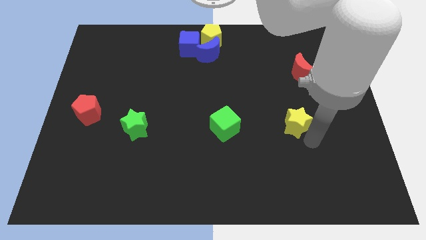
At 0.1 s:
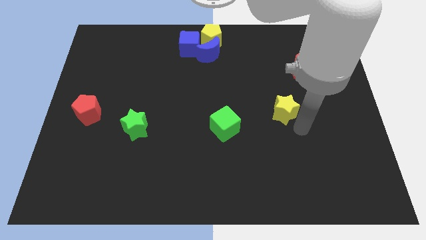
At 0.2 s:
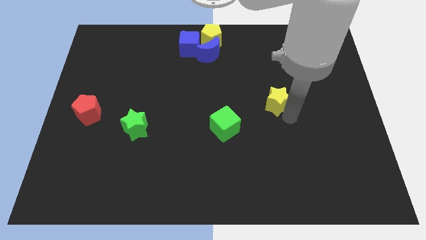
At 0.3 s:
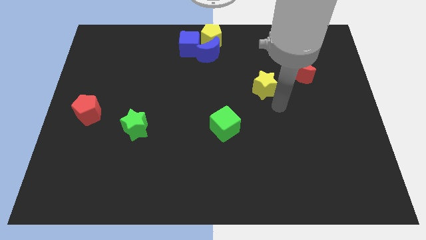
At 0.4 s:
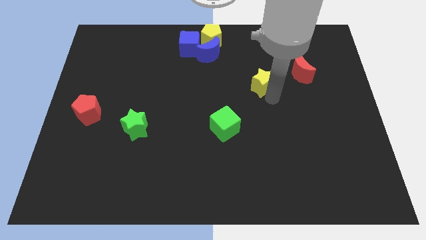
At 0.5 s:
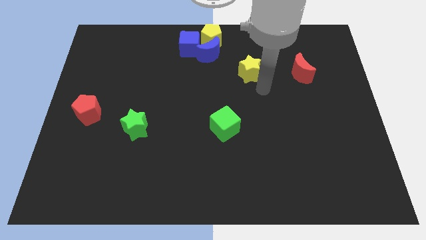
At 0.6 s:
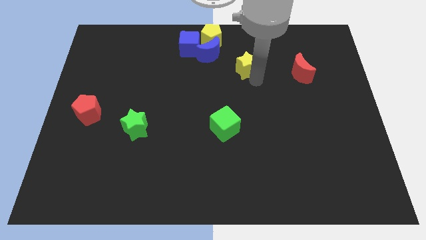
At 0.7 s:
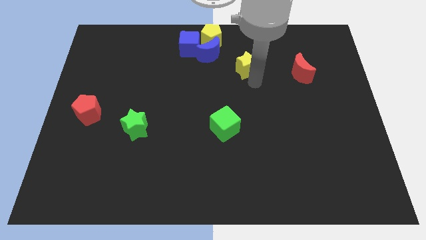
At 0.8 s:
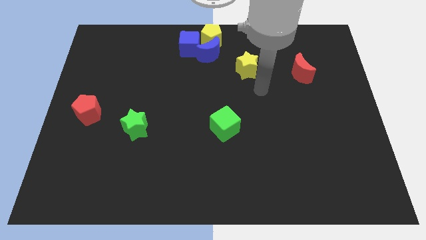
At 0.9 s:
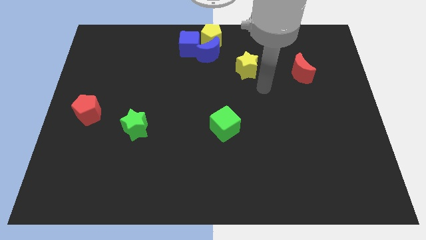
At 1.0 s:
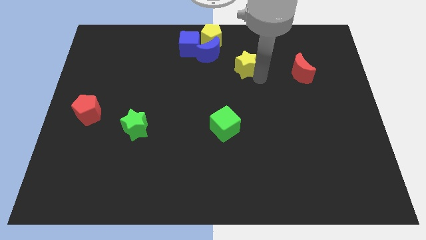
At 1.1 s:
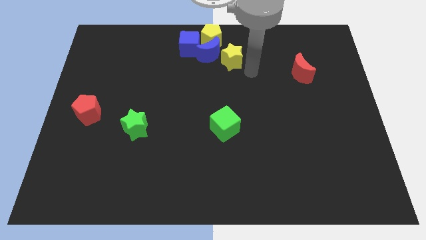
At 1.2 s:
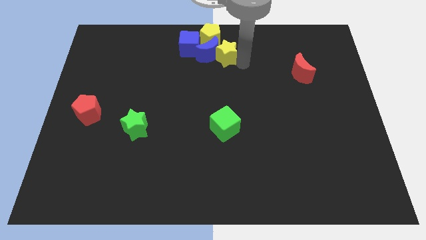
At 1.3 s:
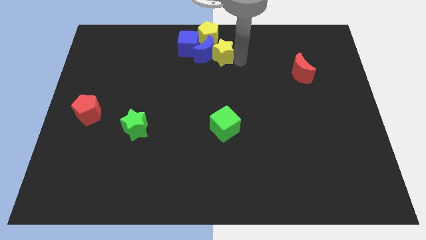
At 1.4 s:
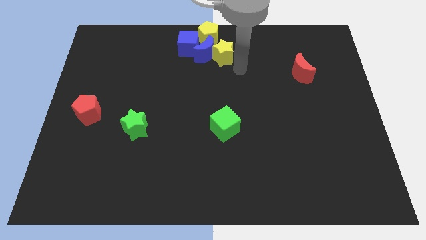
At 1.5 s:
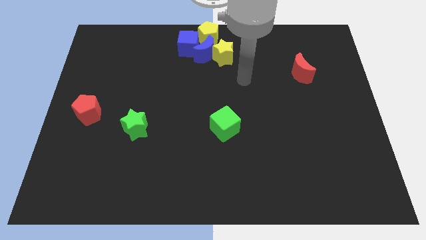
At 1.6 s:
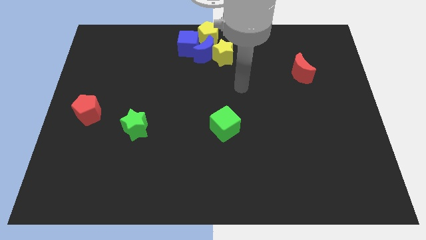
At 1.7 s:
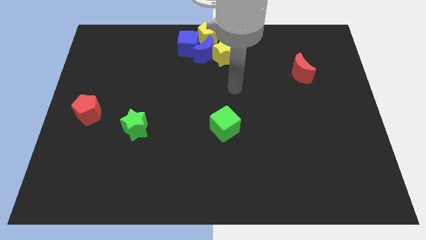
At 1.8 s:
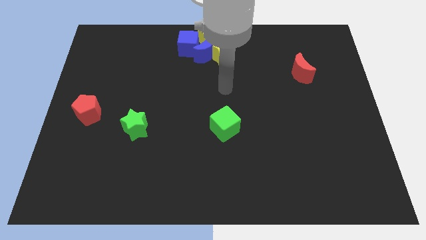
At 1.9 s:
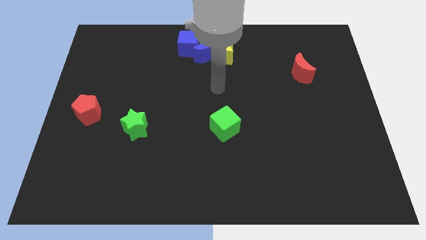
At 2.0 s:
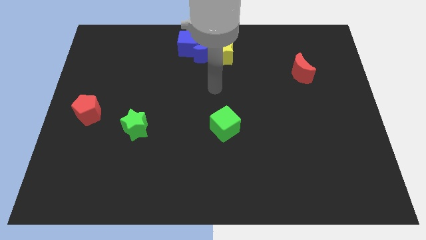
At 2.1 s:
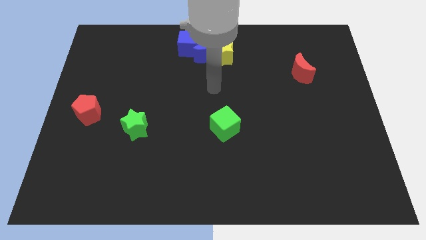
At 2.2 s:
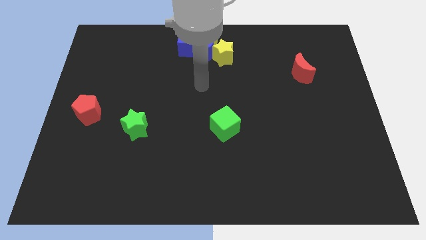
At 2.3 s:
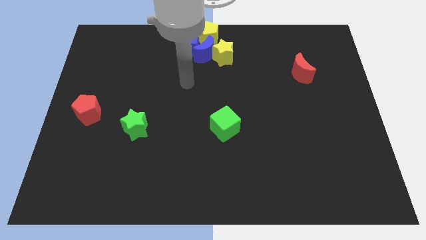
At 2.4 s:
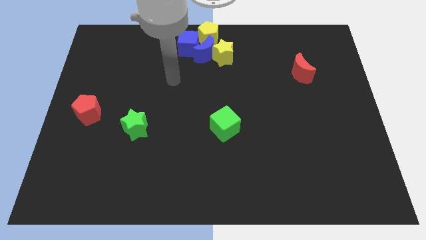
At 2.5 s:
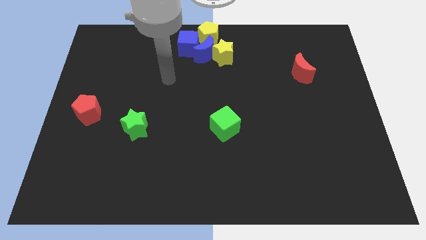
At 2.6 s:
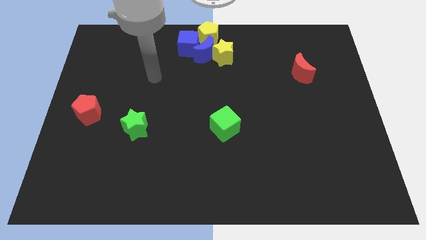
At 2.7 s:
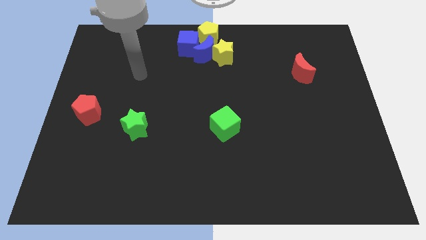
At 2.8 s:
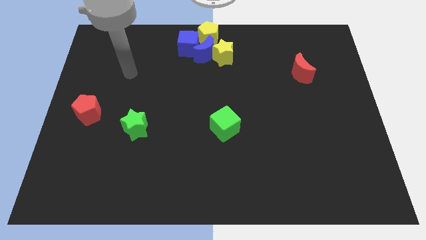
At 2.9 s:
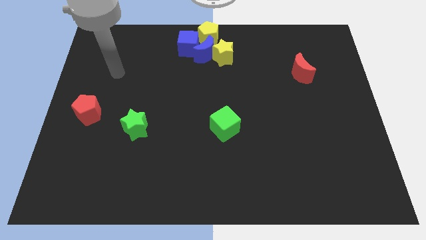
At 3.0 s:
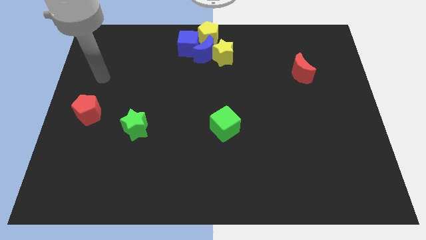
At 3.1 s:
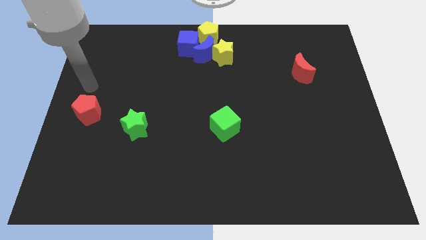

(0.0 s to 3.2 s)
add the yellow star to the group of blocks at the top center of the board

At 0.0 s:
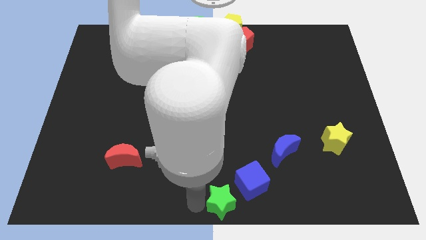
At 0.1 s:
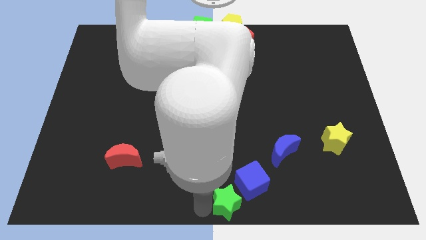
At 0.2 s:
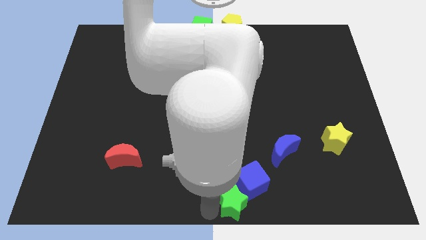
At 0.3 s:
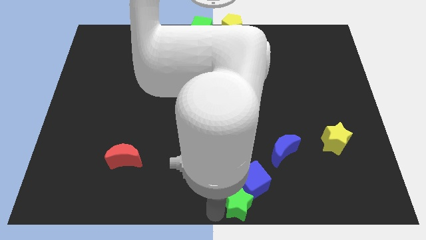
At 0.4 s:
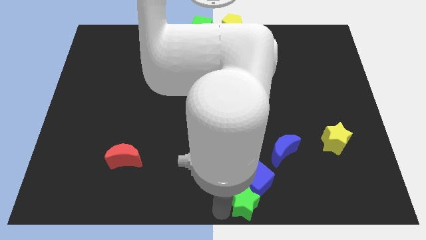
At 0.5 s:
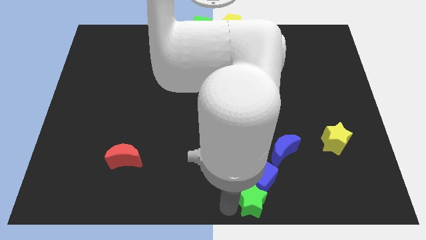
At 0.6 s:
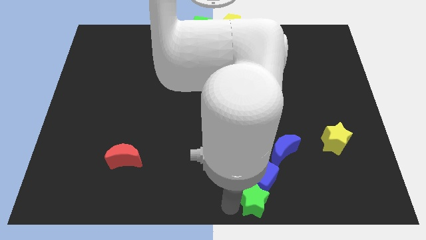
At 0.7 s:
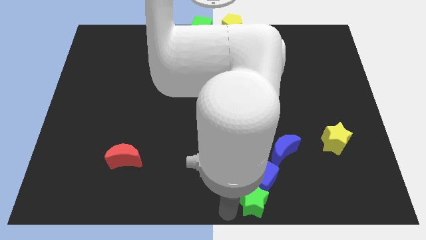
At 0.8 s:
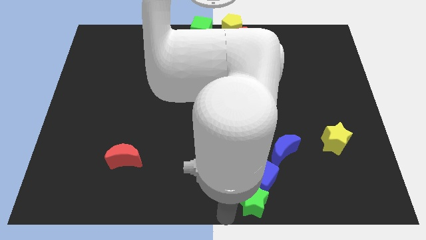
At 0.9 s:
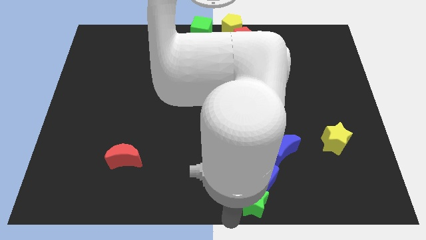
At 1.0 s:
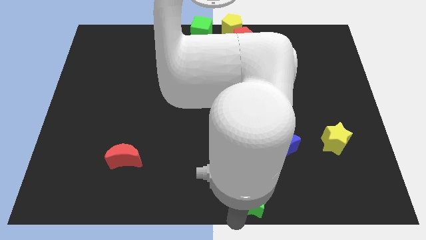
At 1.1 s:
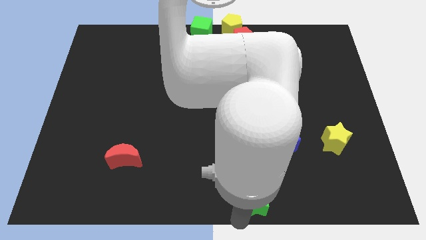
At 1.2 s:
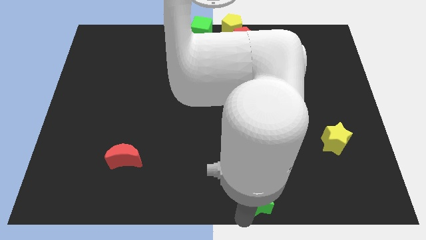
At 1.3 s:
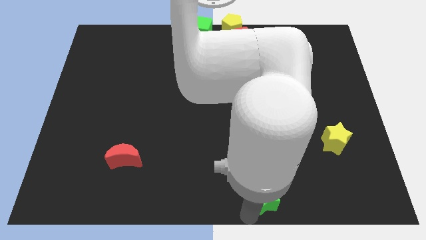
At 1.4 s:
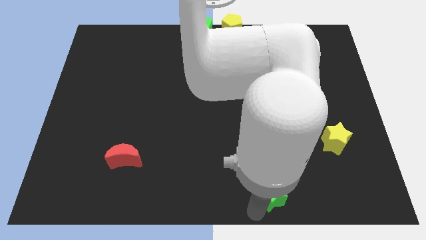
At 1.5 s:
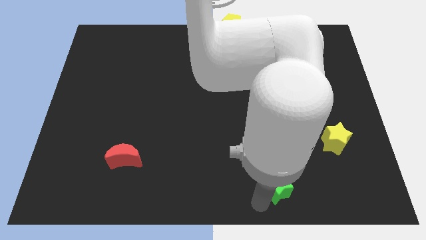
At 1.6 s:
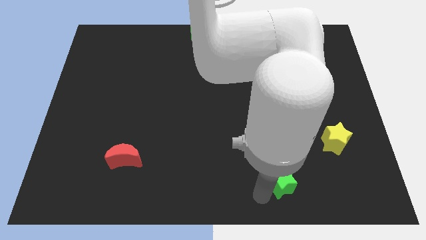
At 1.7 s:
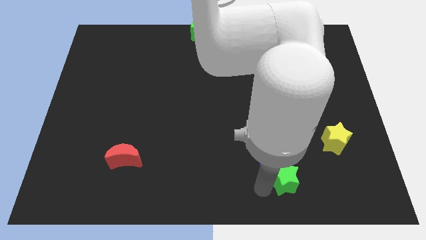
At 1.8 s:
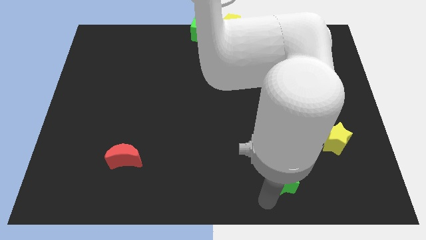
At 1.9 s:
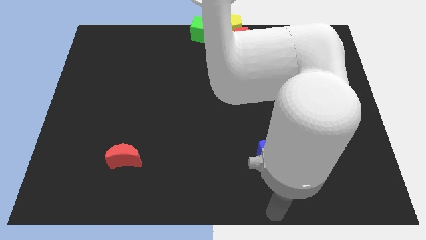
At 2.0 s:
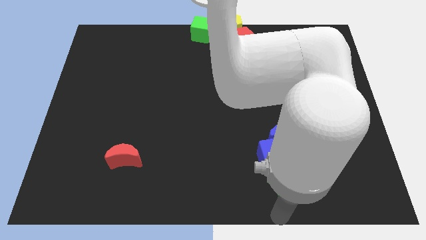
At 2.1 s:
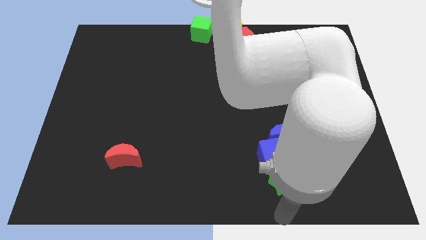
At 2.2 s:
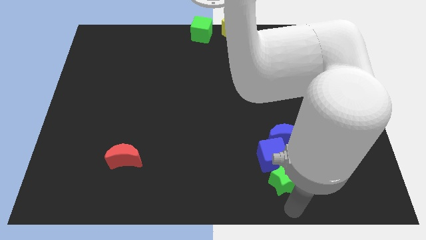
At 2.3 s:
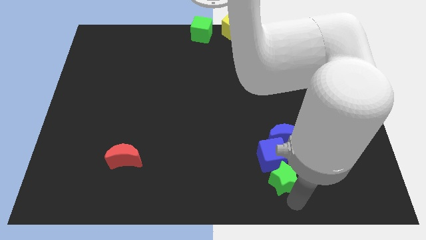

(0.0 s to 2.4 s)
place the green star and blue cube below into blue moon

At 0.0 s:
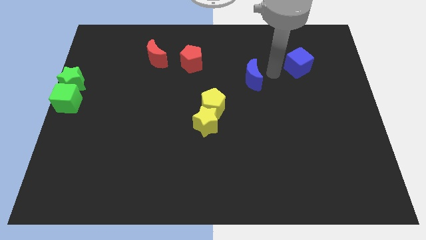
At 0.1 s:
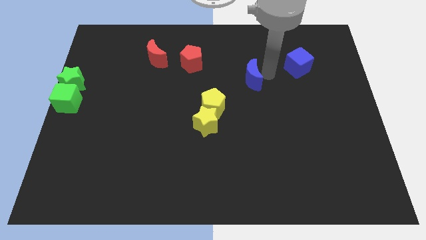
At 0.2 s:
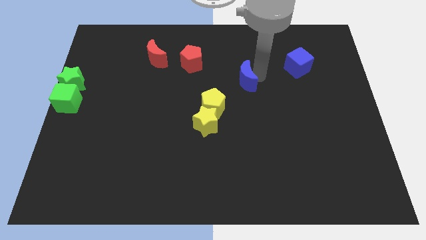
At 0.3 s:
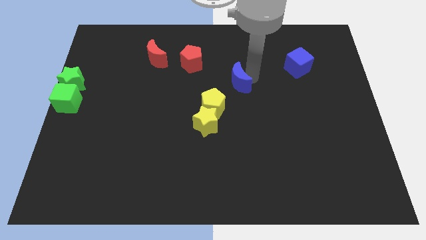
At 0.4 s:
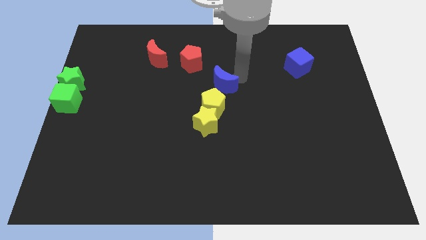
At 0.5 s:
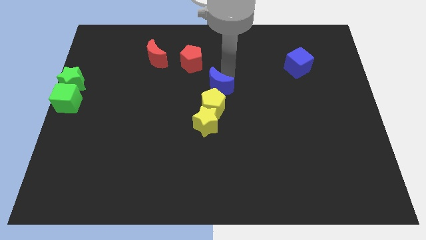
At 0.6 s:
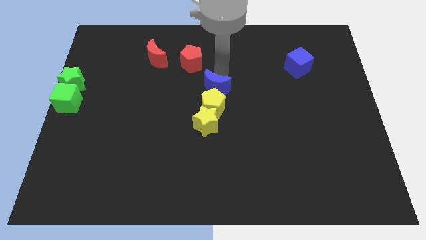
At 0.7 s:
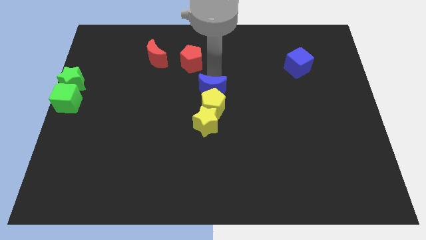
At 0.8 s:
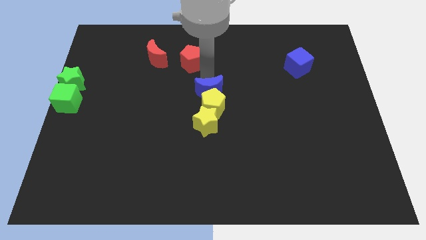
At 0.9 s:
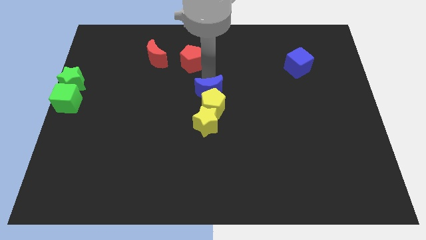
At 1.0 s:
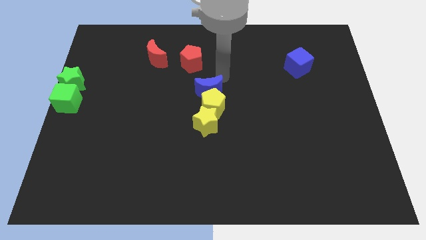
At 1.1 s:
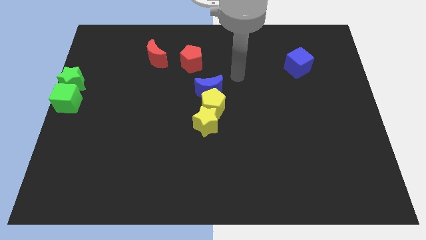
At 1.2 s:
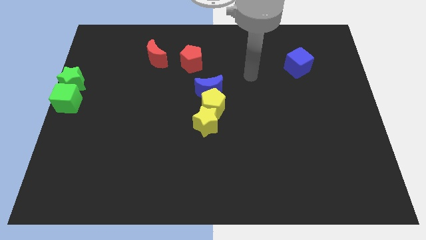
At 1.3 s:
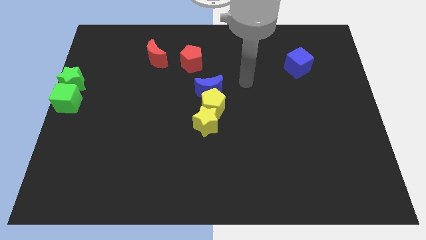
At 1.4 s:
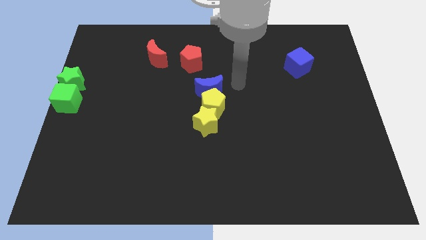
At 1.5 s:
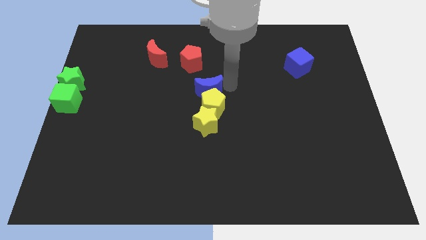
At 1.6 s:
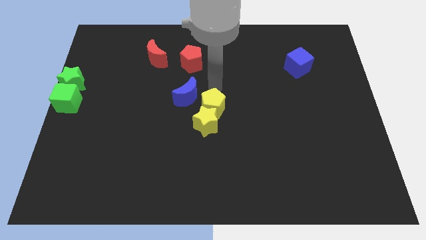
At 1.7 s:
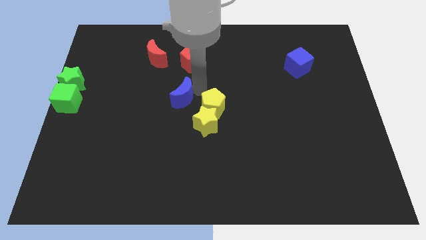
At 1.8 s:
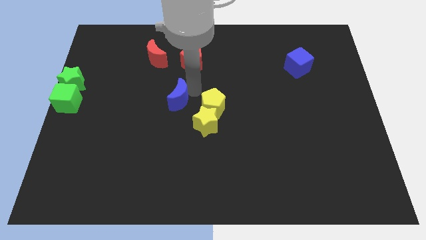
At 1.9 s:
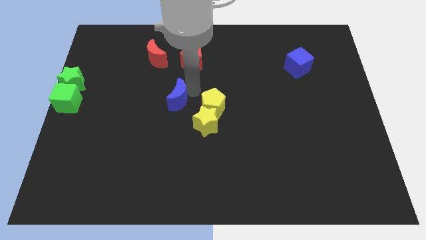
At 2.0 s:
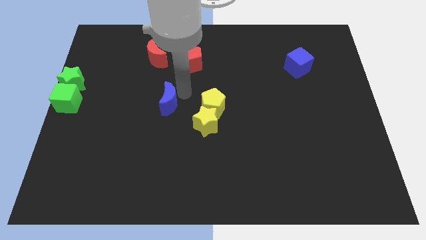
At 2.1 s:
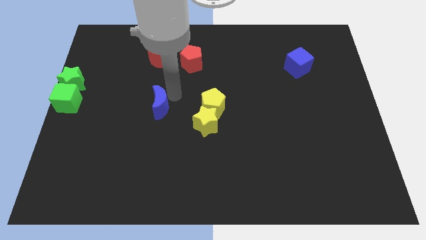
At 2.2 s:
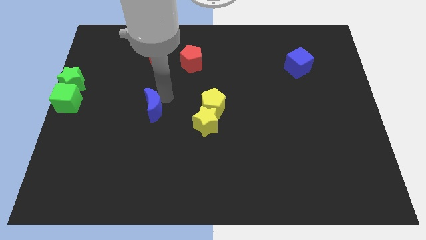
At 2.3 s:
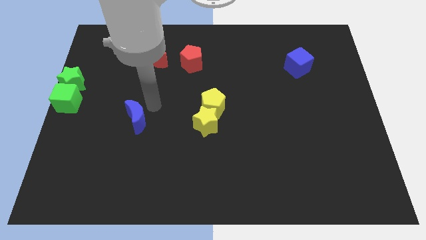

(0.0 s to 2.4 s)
place blue moon to left of the yellow star

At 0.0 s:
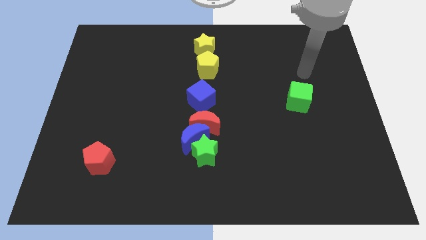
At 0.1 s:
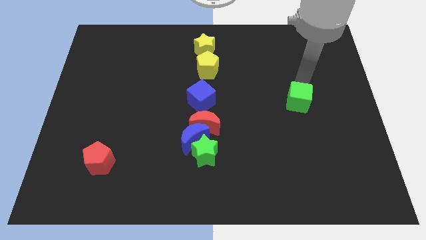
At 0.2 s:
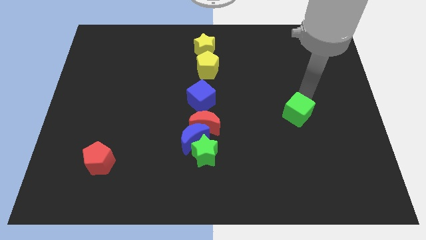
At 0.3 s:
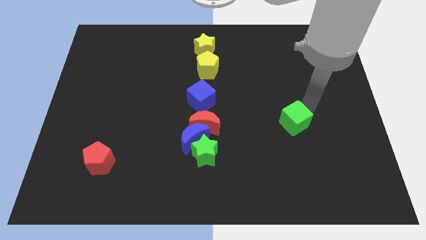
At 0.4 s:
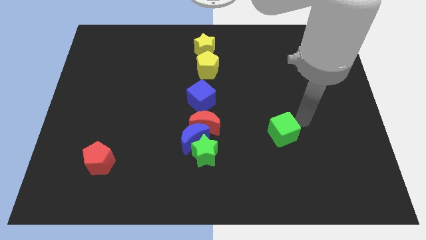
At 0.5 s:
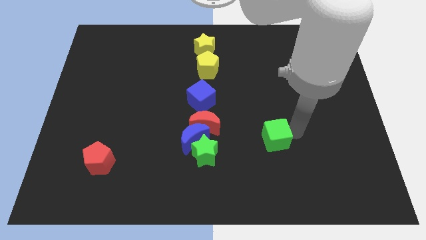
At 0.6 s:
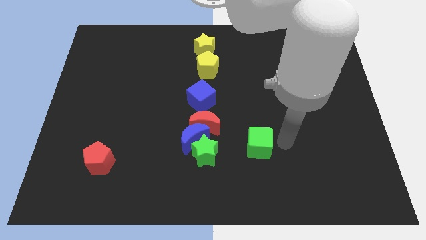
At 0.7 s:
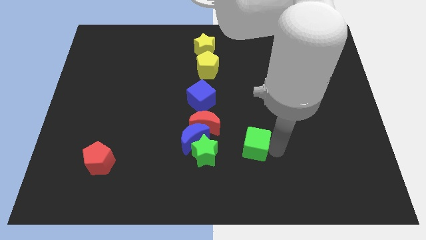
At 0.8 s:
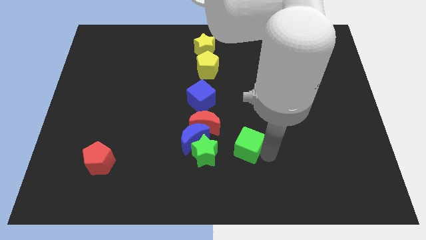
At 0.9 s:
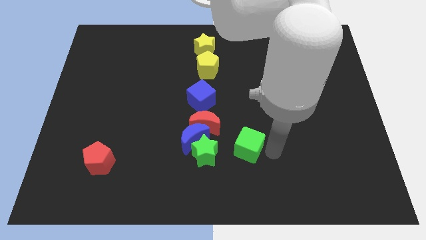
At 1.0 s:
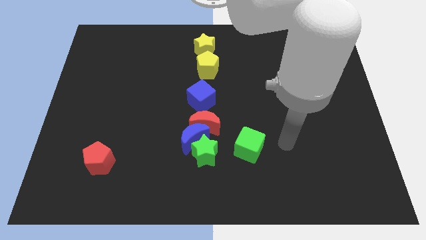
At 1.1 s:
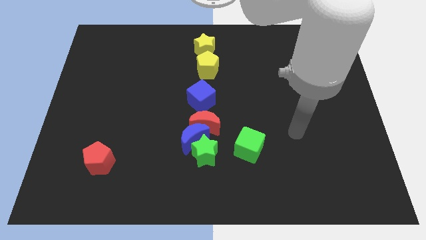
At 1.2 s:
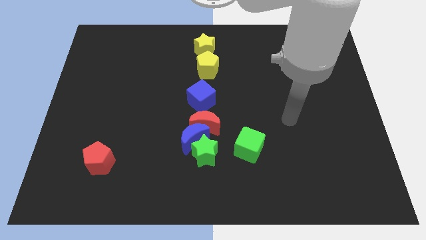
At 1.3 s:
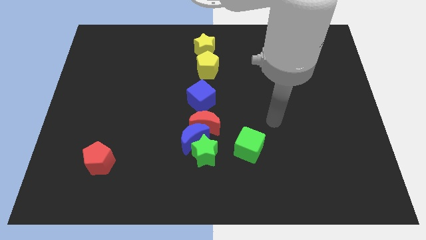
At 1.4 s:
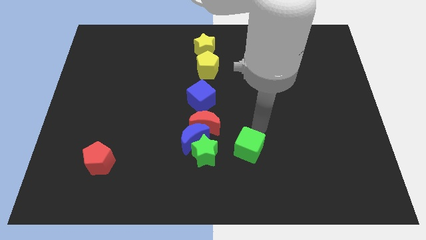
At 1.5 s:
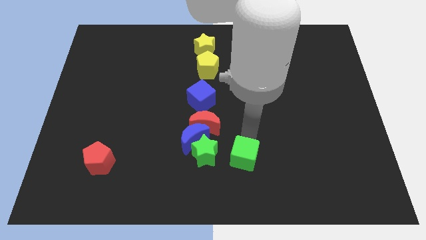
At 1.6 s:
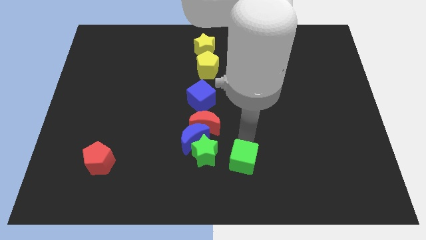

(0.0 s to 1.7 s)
move the green cube right to the green star
